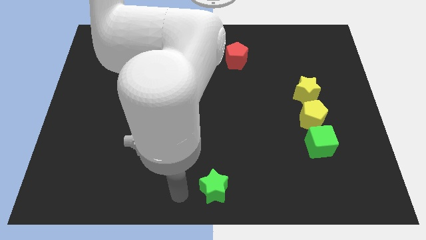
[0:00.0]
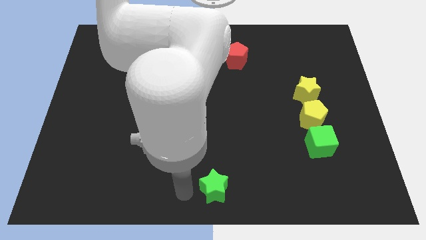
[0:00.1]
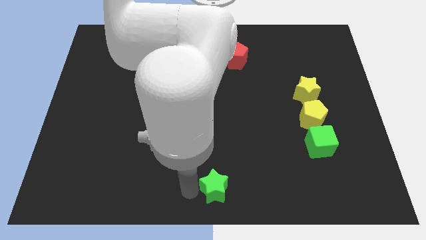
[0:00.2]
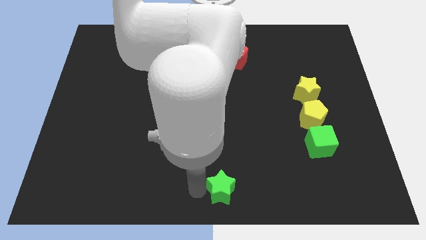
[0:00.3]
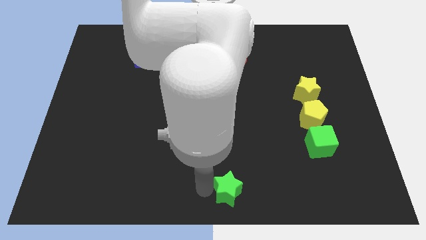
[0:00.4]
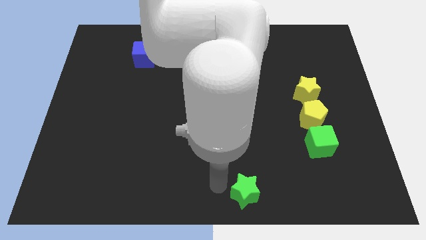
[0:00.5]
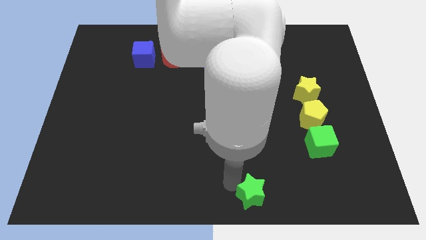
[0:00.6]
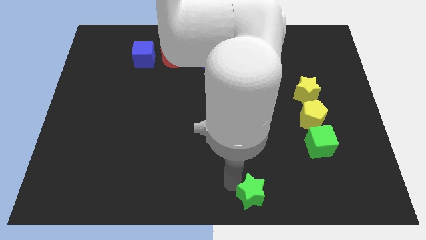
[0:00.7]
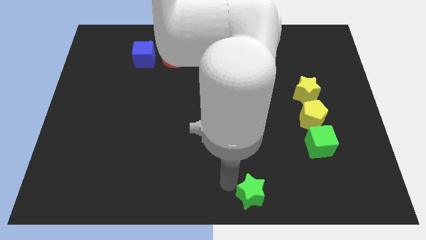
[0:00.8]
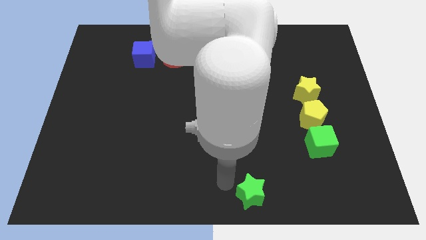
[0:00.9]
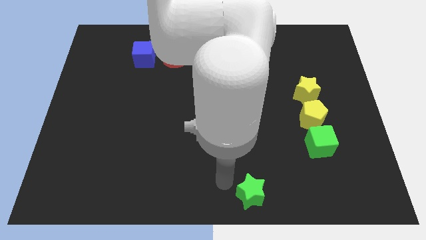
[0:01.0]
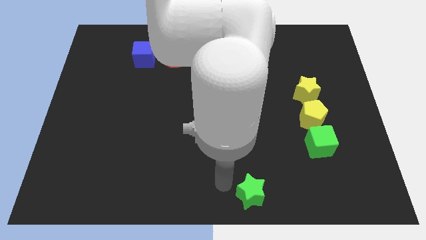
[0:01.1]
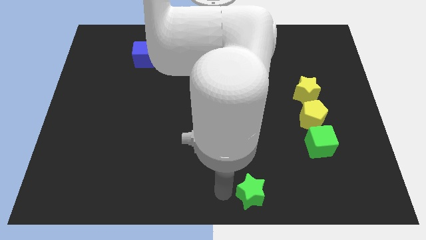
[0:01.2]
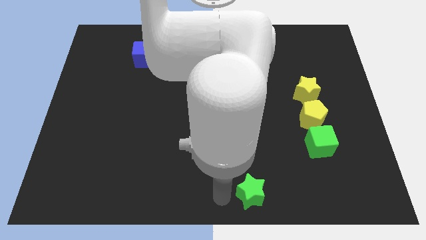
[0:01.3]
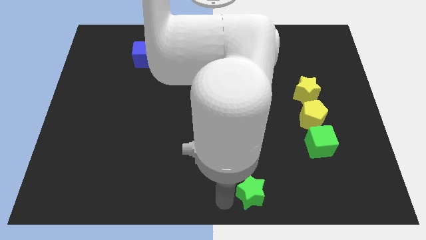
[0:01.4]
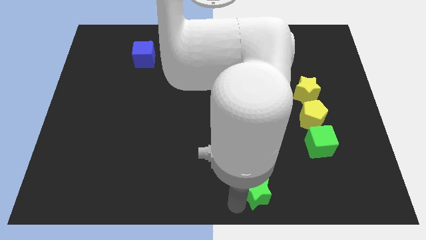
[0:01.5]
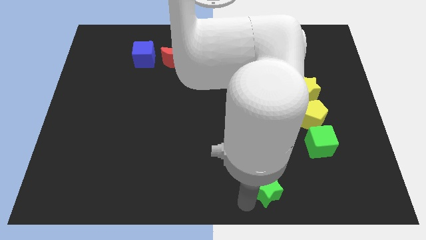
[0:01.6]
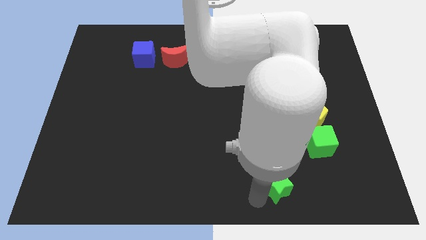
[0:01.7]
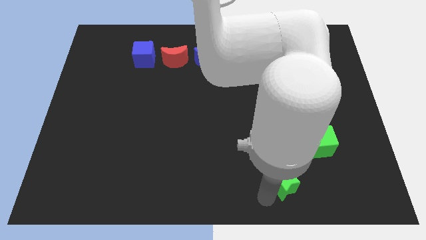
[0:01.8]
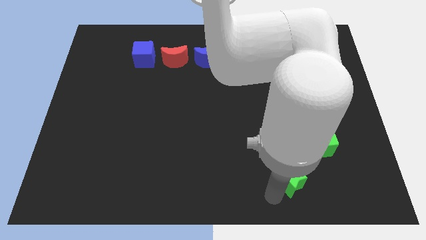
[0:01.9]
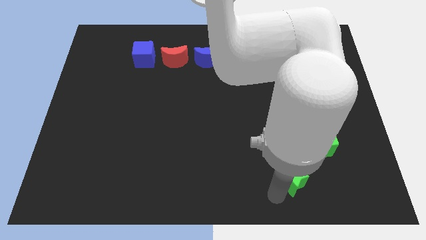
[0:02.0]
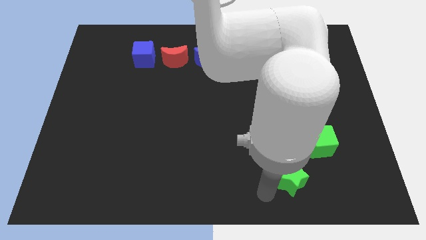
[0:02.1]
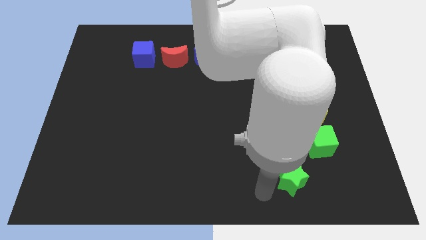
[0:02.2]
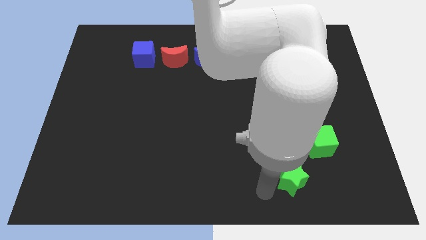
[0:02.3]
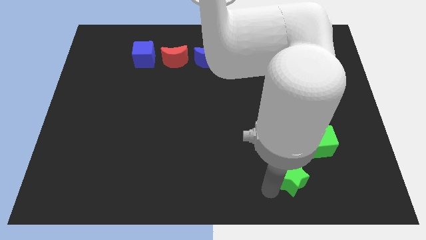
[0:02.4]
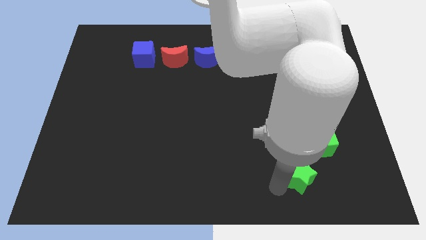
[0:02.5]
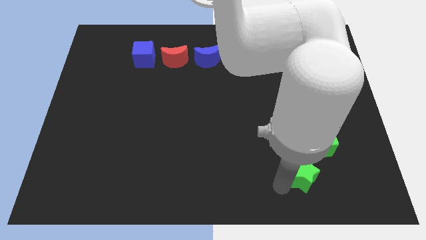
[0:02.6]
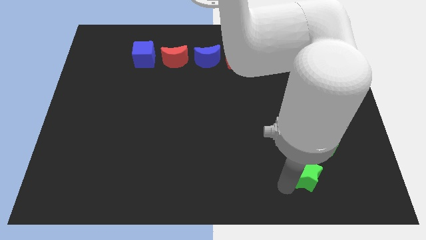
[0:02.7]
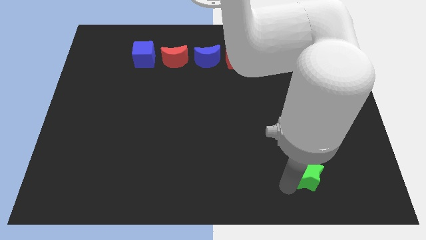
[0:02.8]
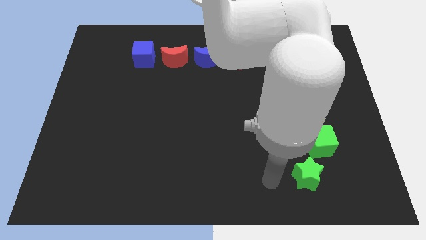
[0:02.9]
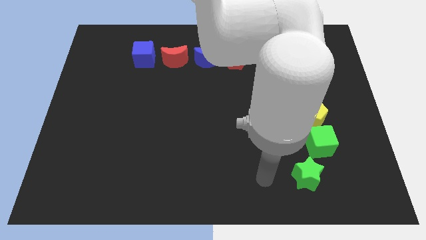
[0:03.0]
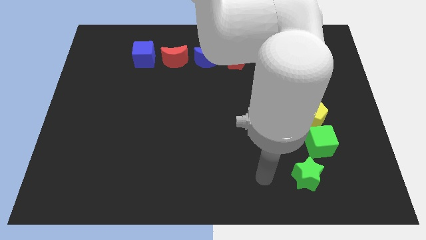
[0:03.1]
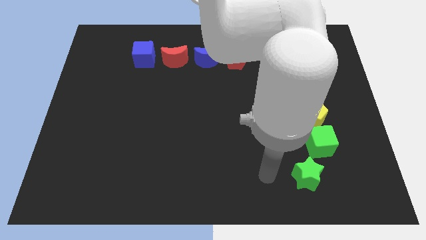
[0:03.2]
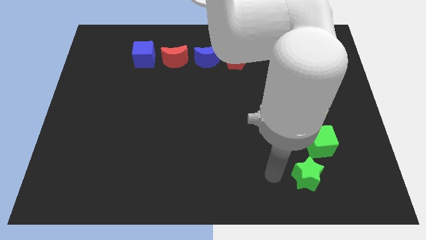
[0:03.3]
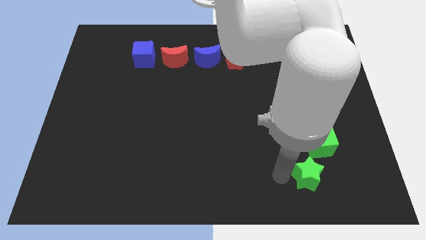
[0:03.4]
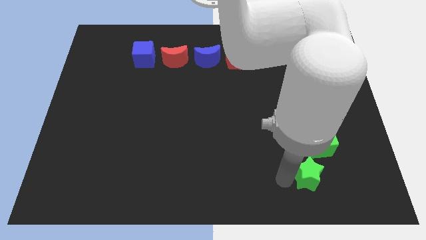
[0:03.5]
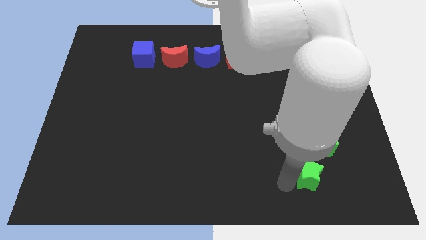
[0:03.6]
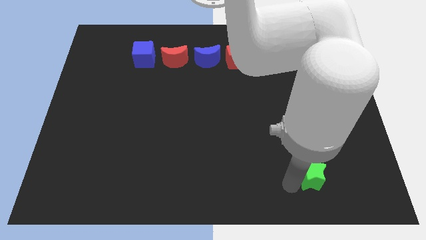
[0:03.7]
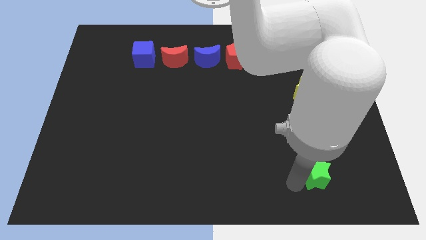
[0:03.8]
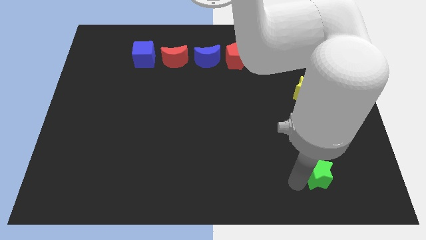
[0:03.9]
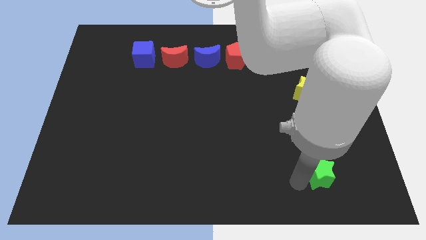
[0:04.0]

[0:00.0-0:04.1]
place the green star below the green cube

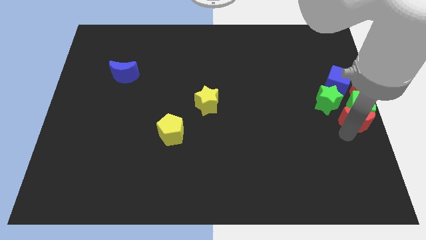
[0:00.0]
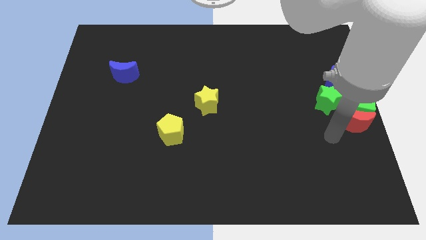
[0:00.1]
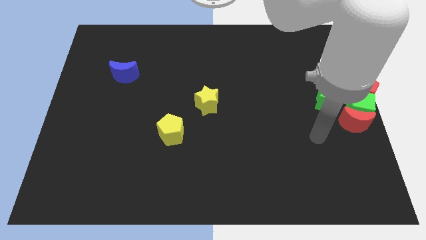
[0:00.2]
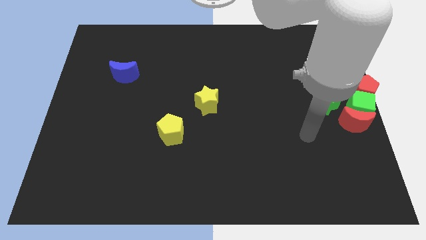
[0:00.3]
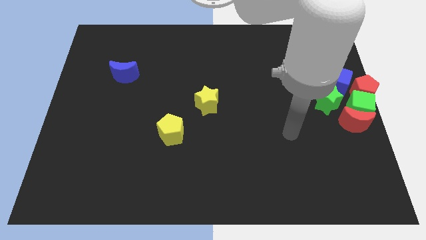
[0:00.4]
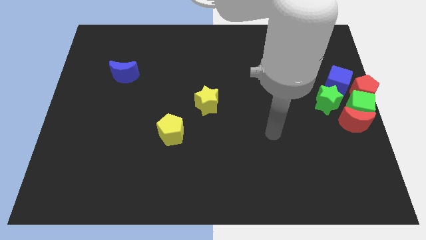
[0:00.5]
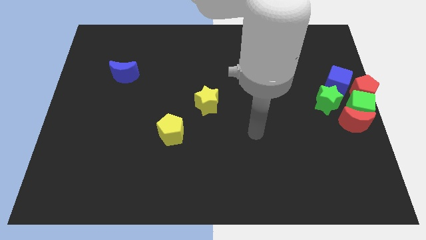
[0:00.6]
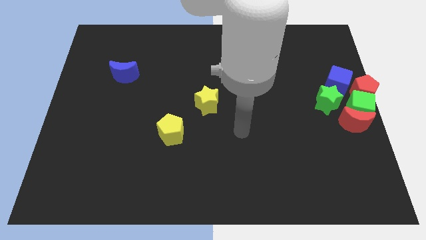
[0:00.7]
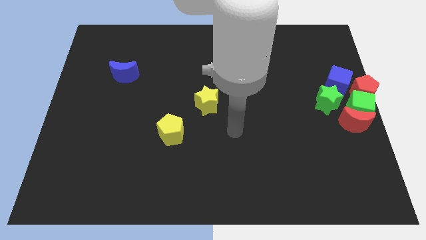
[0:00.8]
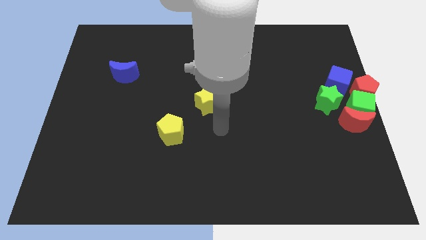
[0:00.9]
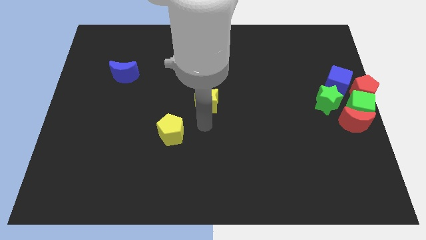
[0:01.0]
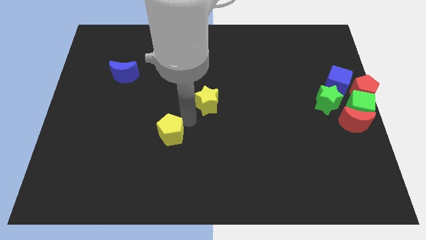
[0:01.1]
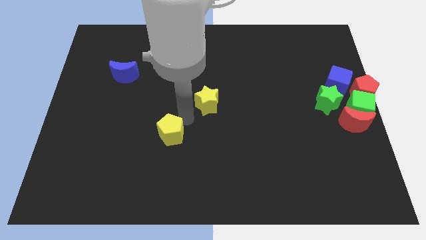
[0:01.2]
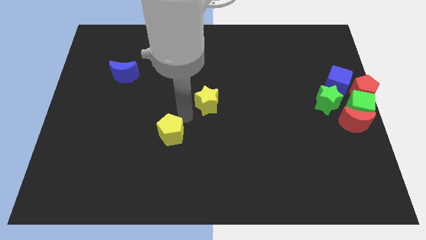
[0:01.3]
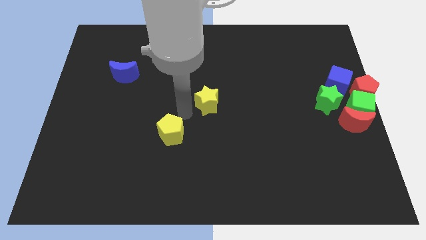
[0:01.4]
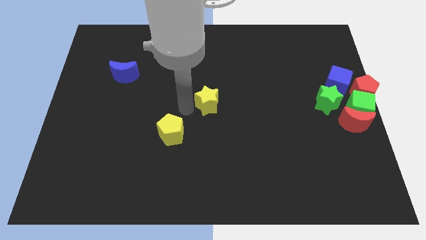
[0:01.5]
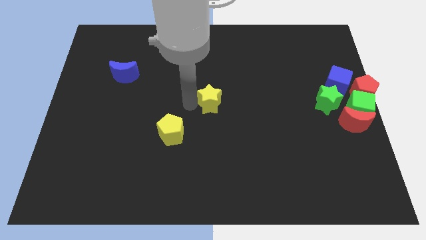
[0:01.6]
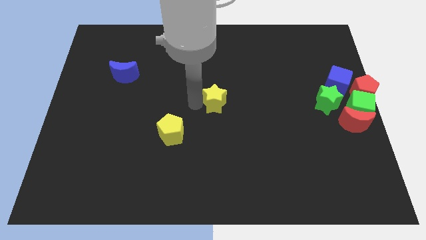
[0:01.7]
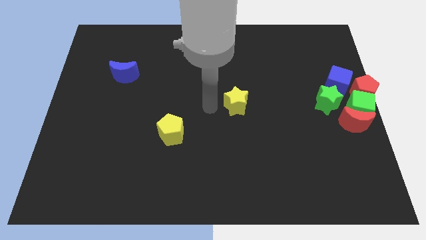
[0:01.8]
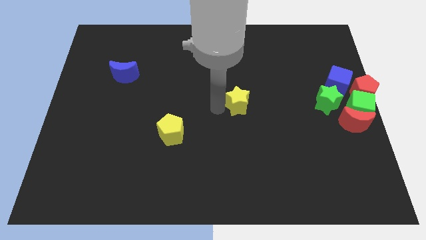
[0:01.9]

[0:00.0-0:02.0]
push yellow star towards green star

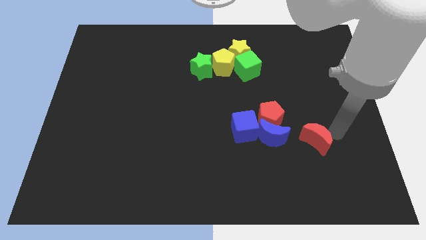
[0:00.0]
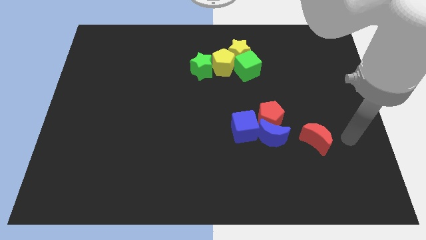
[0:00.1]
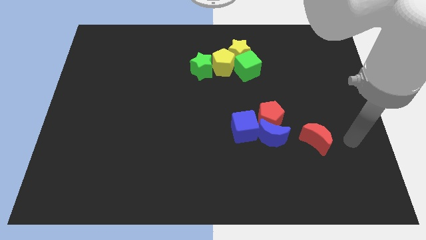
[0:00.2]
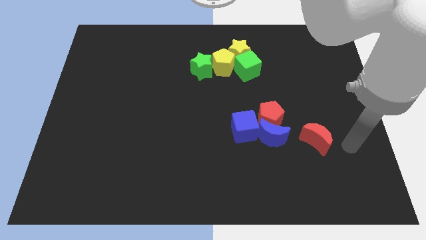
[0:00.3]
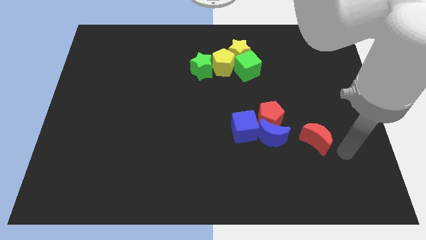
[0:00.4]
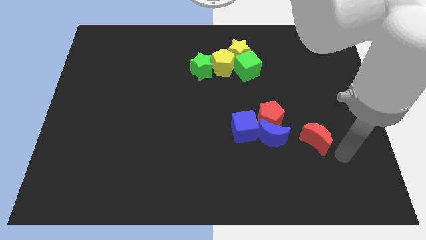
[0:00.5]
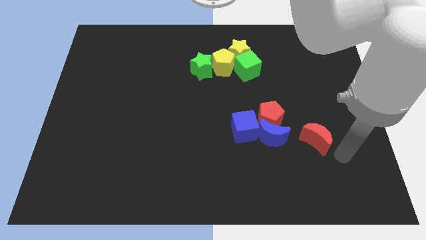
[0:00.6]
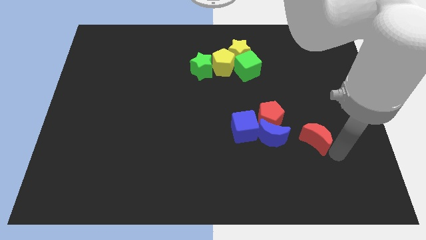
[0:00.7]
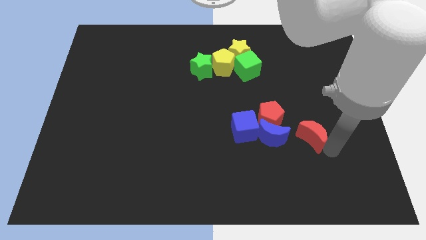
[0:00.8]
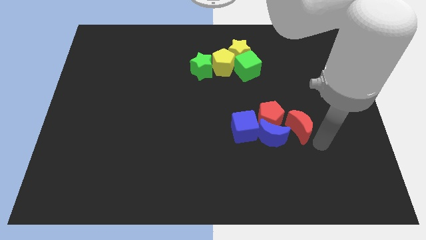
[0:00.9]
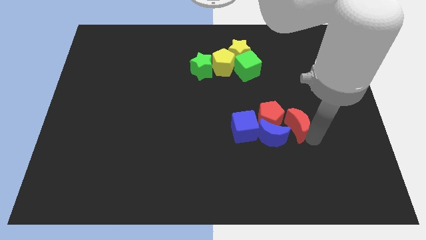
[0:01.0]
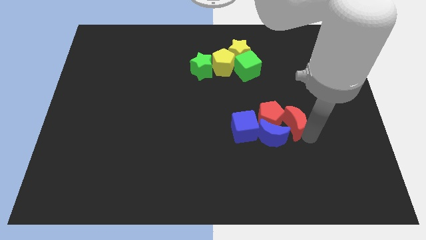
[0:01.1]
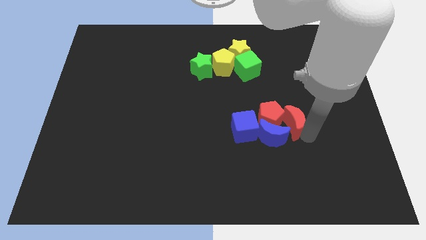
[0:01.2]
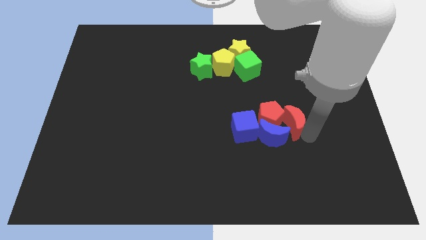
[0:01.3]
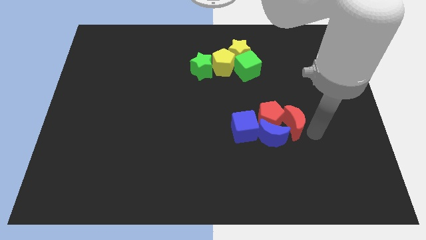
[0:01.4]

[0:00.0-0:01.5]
move the red crescent close to the red pentagon and blue moon

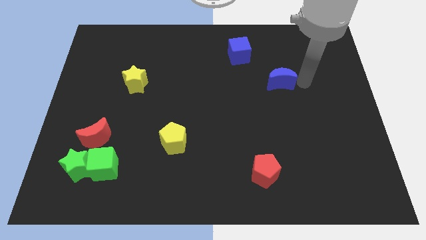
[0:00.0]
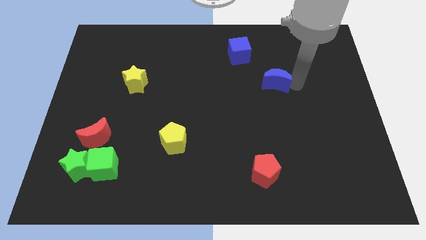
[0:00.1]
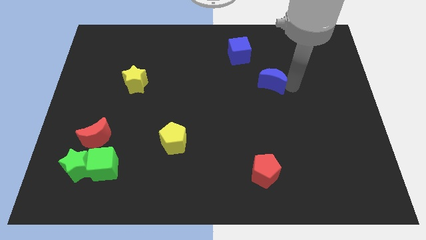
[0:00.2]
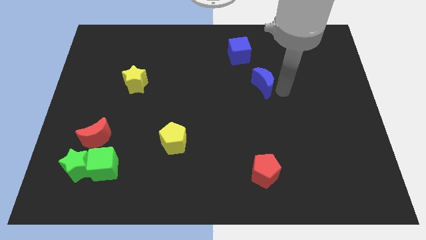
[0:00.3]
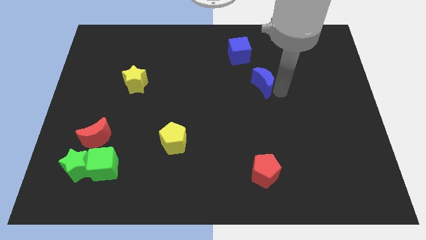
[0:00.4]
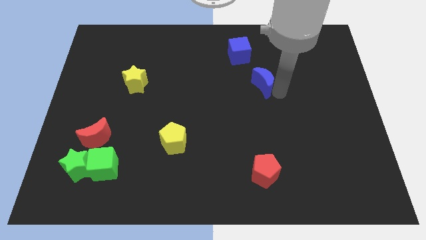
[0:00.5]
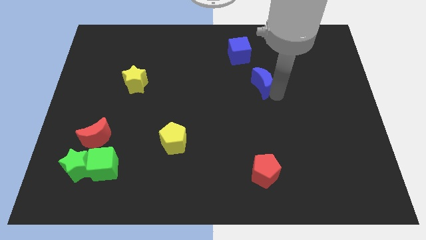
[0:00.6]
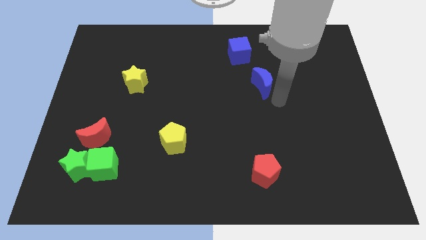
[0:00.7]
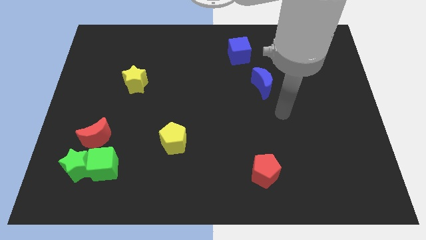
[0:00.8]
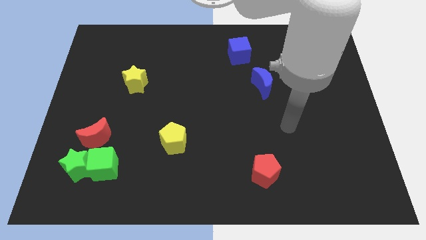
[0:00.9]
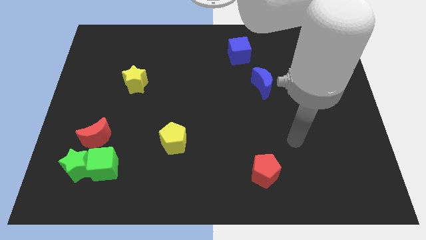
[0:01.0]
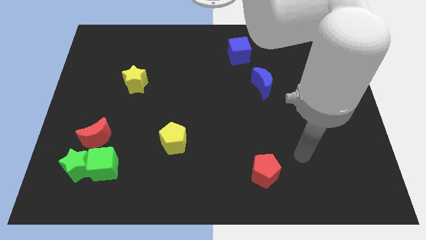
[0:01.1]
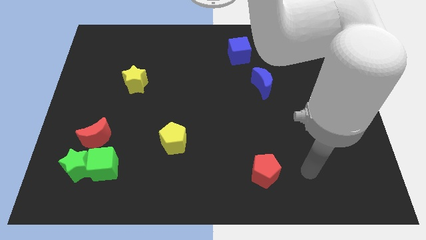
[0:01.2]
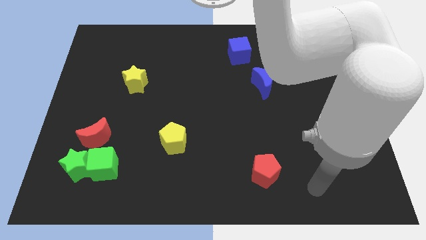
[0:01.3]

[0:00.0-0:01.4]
slide the blue crescent to the left
